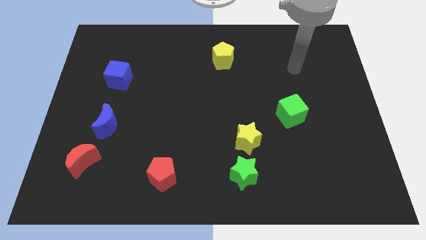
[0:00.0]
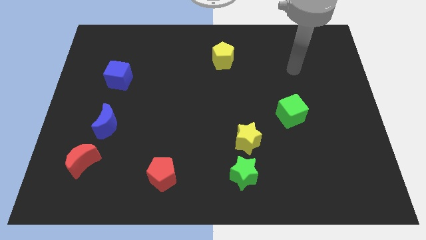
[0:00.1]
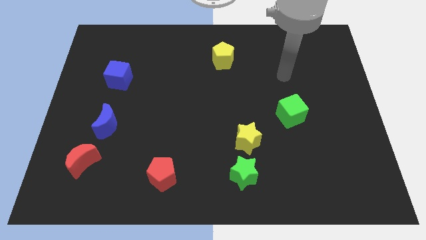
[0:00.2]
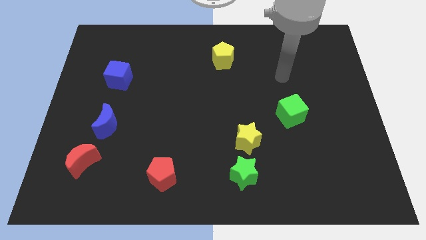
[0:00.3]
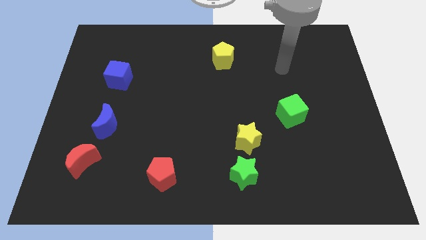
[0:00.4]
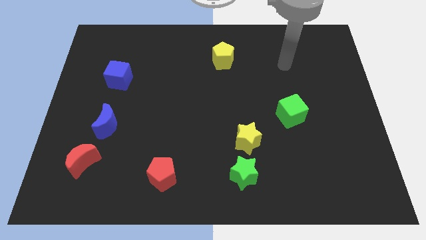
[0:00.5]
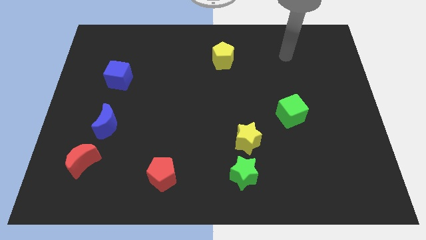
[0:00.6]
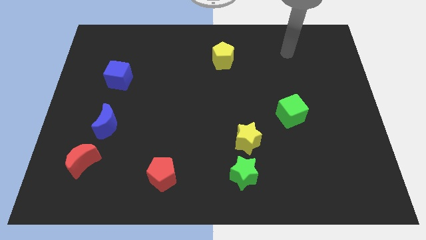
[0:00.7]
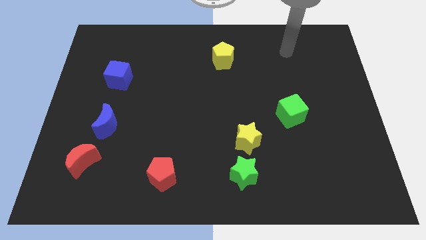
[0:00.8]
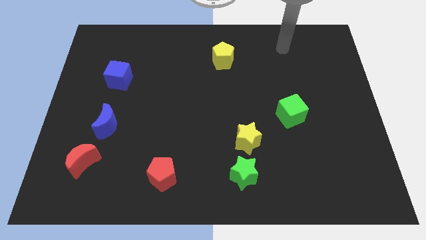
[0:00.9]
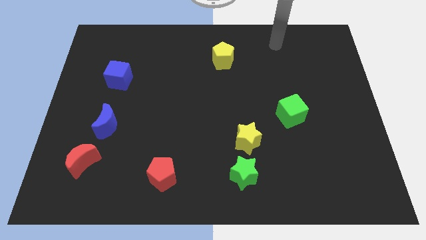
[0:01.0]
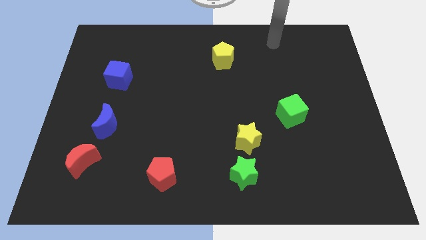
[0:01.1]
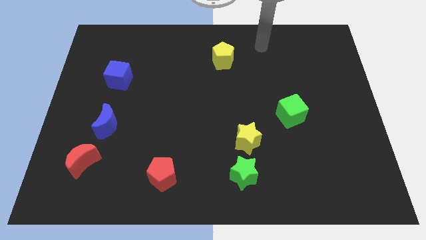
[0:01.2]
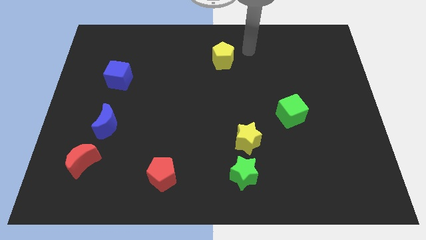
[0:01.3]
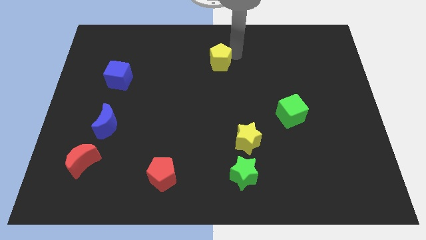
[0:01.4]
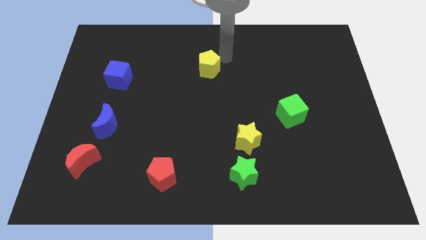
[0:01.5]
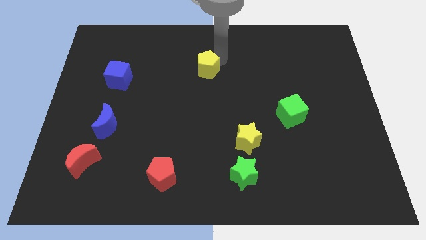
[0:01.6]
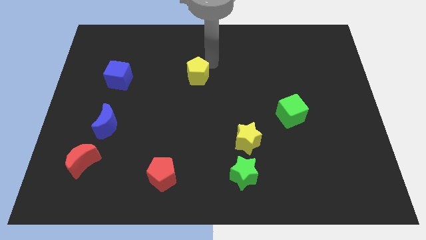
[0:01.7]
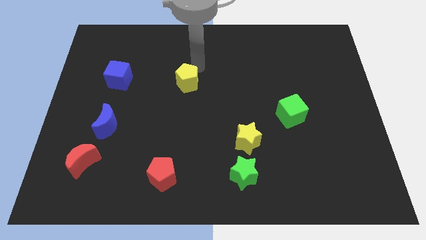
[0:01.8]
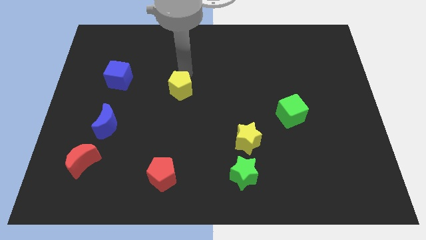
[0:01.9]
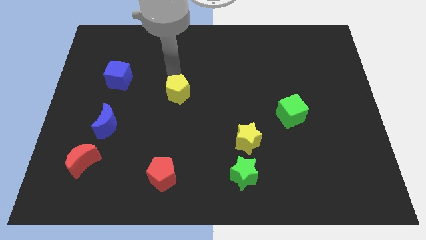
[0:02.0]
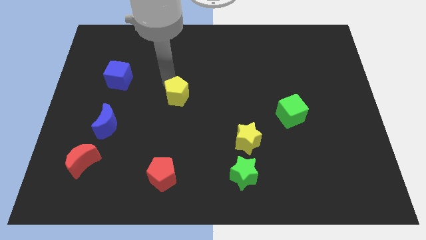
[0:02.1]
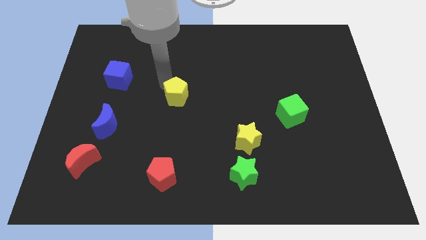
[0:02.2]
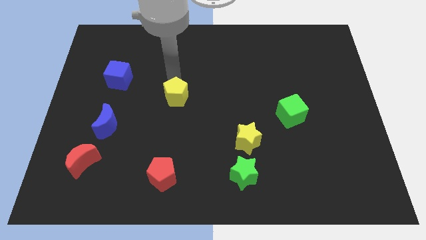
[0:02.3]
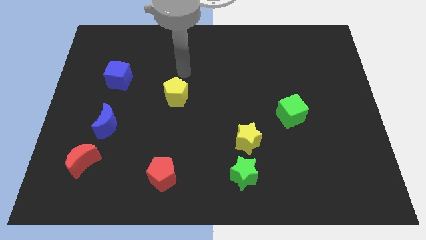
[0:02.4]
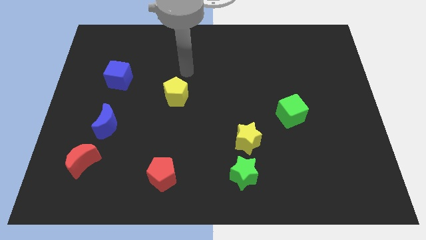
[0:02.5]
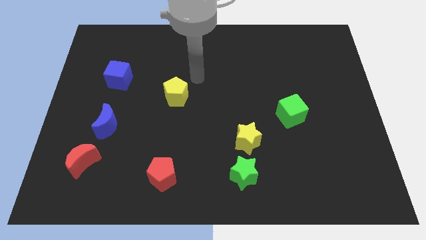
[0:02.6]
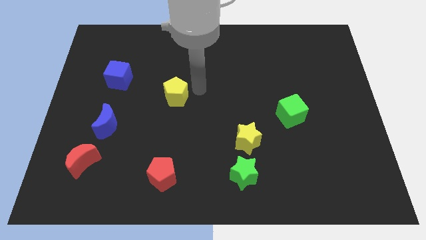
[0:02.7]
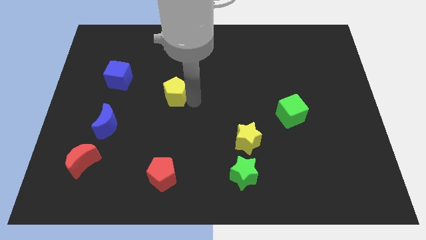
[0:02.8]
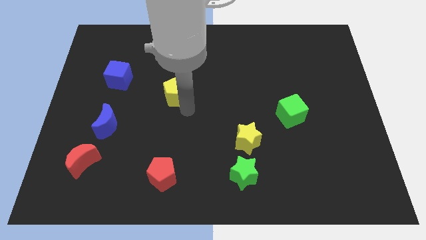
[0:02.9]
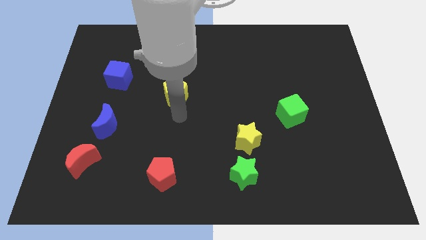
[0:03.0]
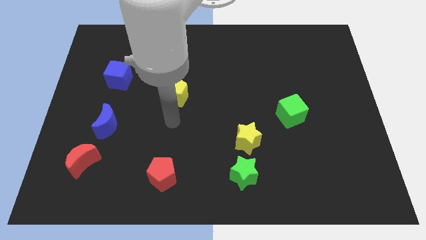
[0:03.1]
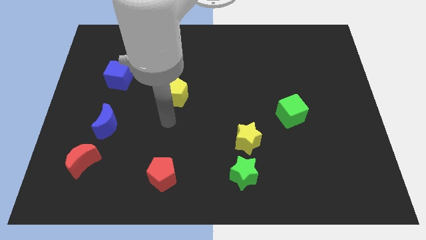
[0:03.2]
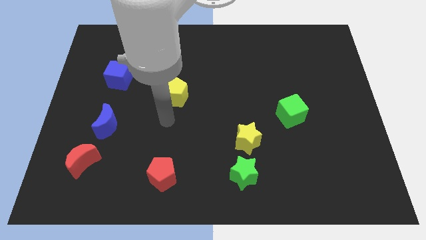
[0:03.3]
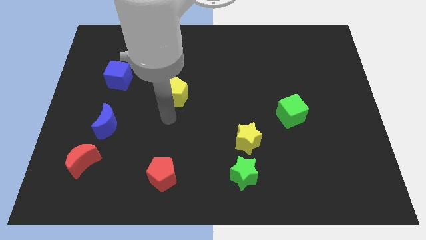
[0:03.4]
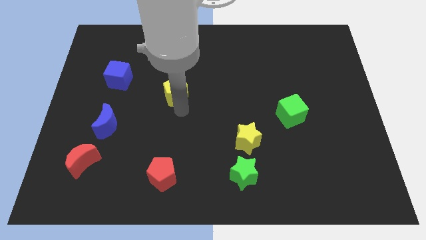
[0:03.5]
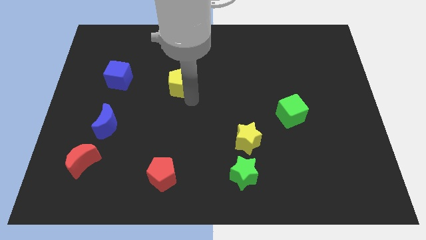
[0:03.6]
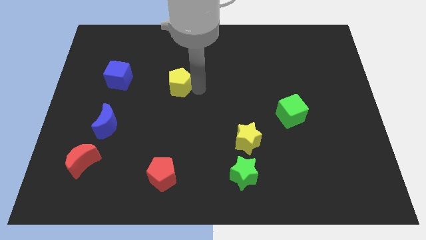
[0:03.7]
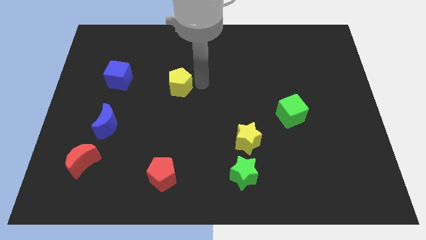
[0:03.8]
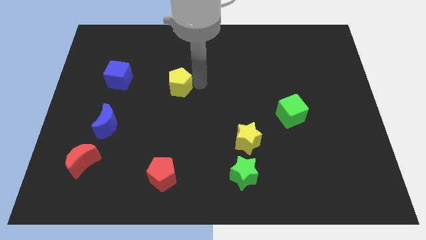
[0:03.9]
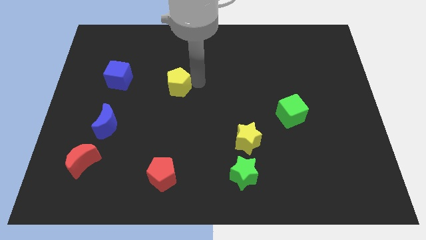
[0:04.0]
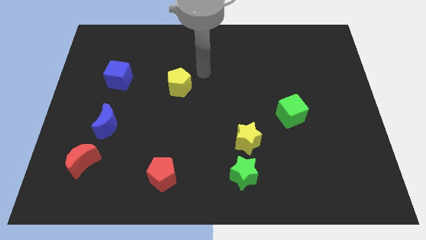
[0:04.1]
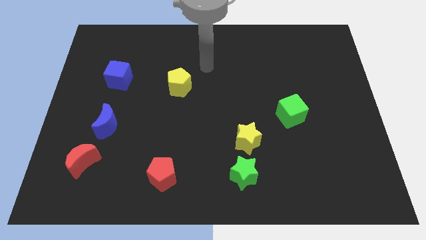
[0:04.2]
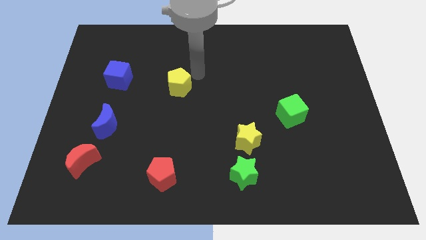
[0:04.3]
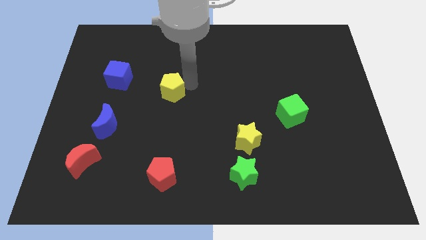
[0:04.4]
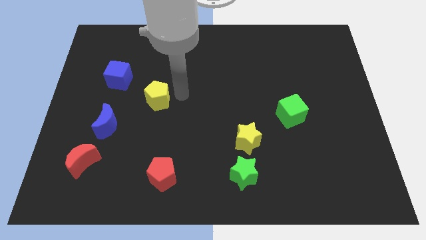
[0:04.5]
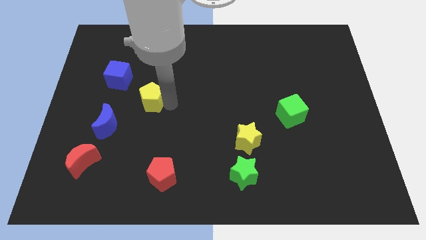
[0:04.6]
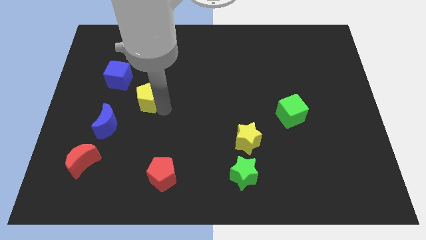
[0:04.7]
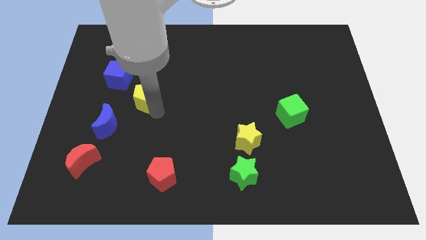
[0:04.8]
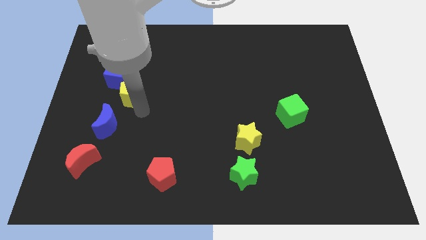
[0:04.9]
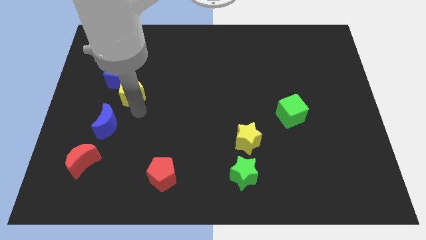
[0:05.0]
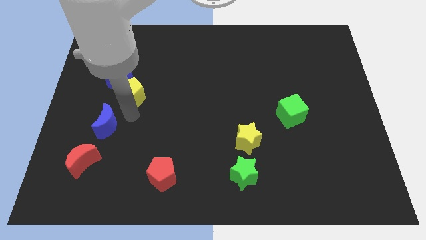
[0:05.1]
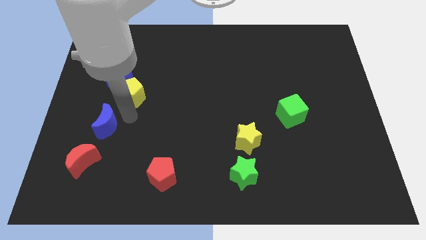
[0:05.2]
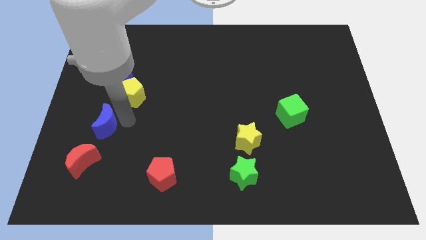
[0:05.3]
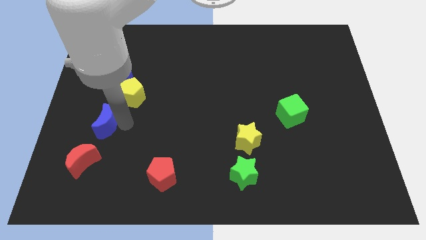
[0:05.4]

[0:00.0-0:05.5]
push the yellow pentagon close to the blue cube

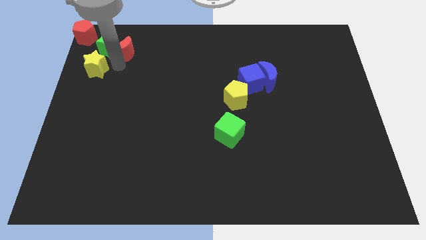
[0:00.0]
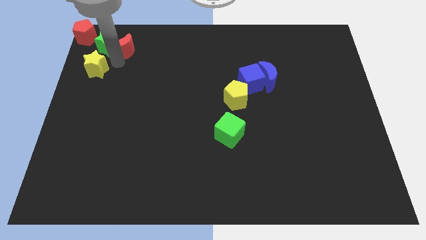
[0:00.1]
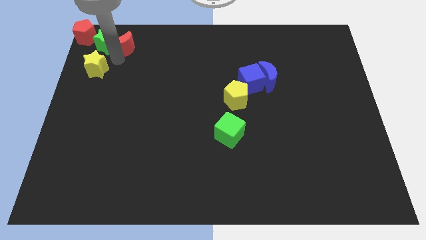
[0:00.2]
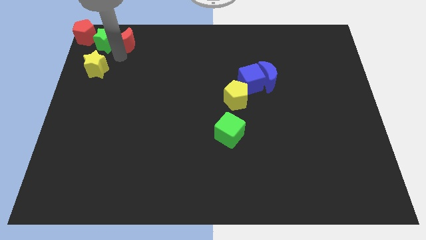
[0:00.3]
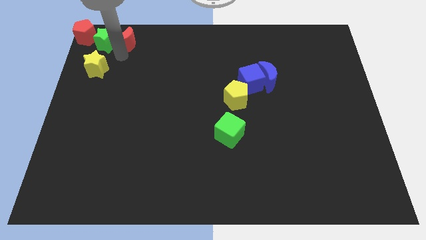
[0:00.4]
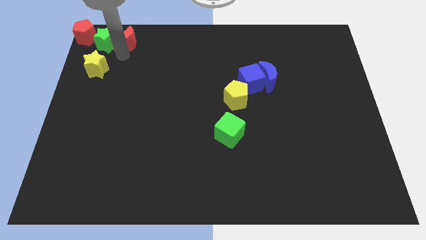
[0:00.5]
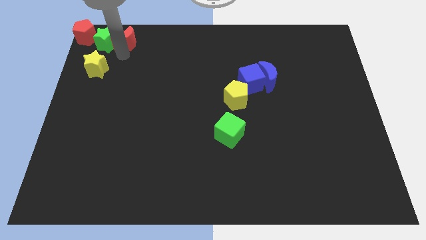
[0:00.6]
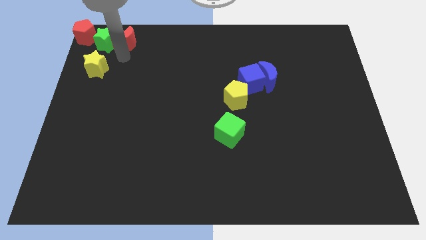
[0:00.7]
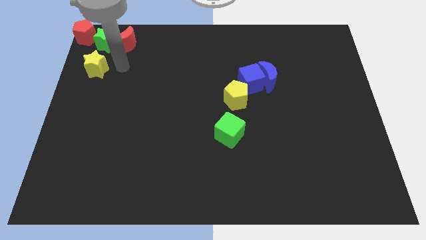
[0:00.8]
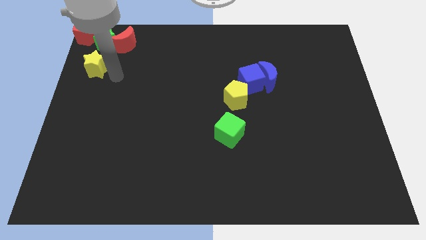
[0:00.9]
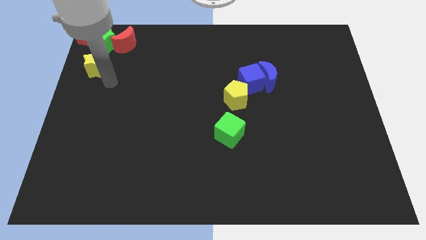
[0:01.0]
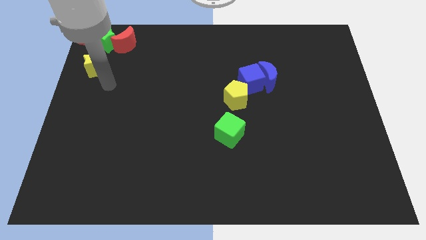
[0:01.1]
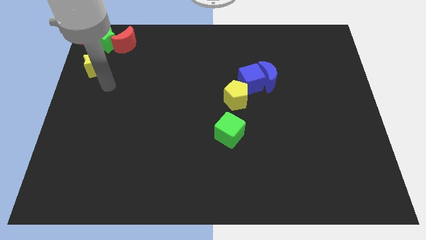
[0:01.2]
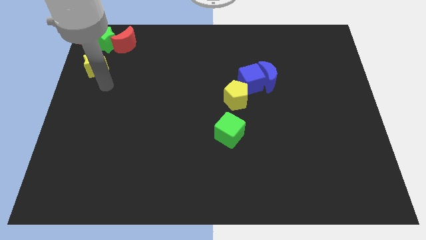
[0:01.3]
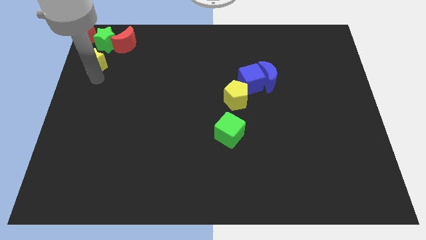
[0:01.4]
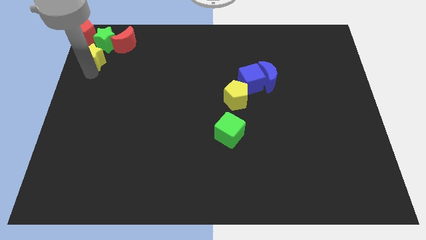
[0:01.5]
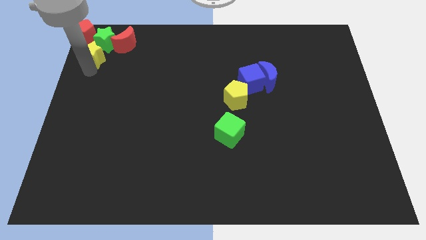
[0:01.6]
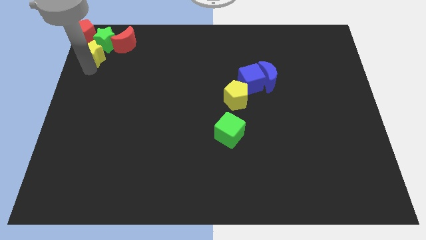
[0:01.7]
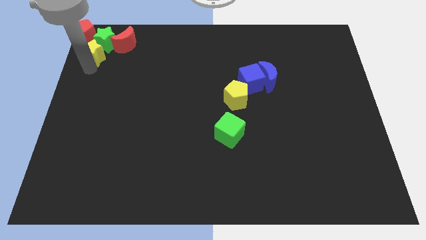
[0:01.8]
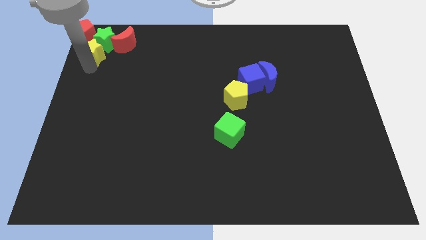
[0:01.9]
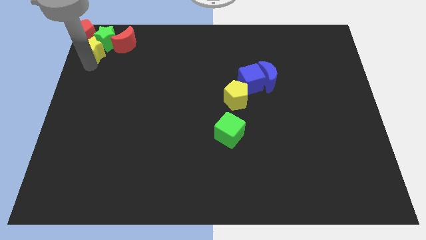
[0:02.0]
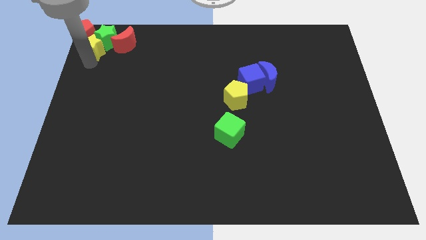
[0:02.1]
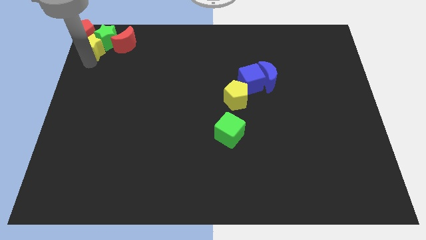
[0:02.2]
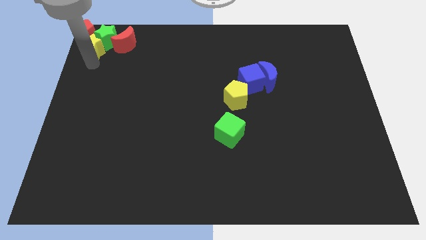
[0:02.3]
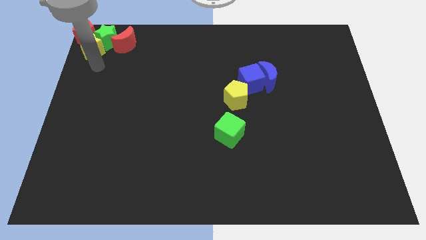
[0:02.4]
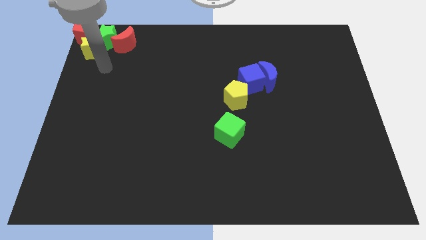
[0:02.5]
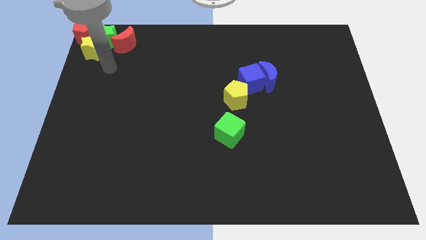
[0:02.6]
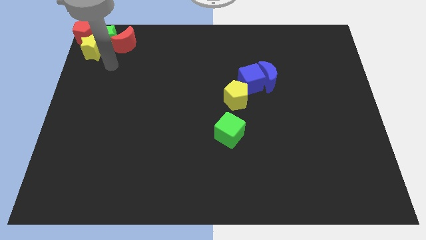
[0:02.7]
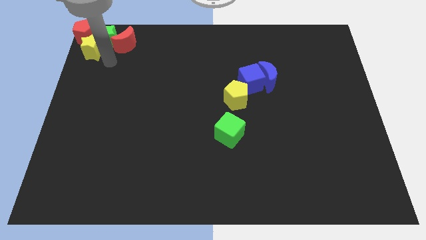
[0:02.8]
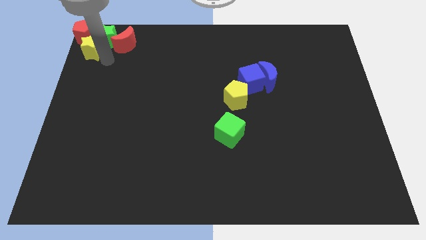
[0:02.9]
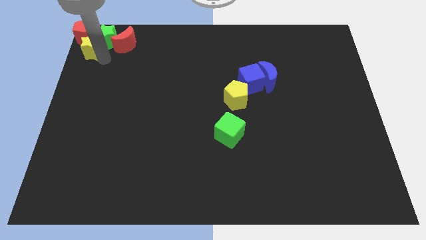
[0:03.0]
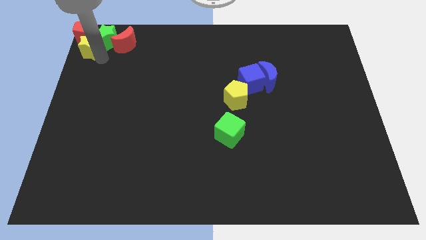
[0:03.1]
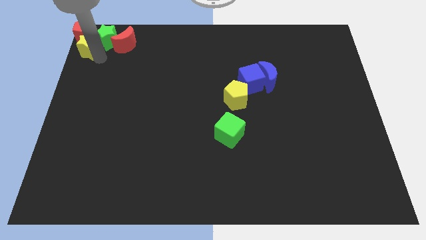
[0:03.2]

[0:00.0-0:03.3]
move blocks into each other

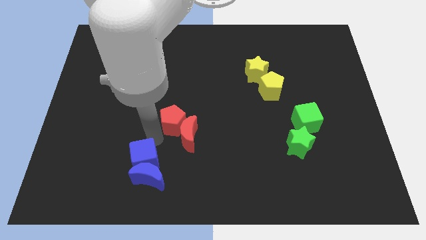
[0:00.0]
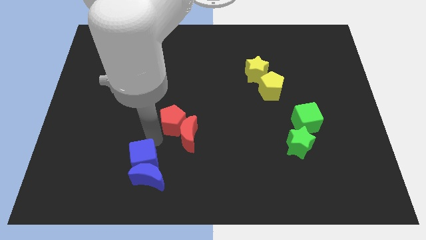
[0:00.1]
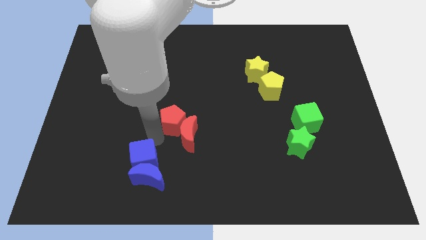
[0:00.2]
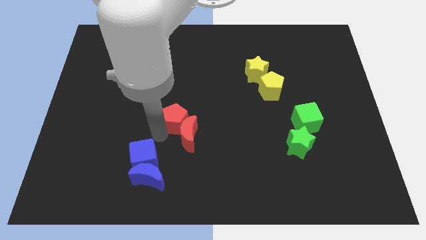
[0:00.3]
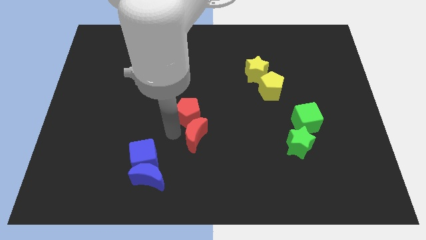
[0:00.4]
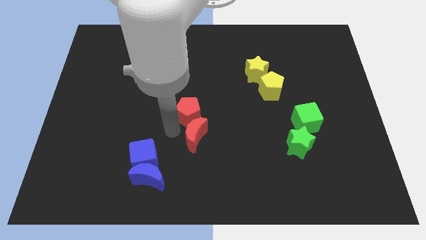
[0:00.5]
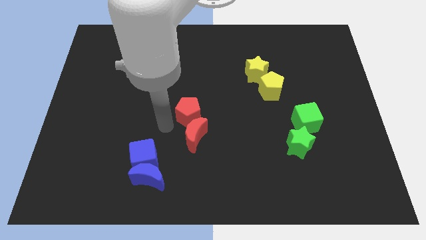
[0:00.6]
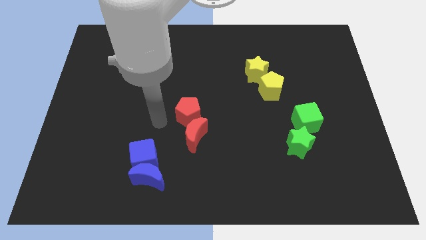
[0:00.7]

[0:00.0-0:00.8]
move the red pentagon upwards slightly
